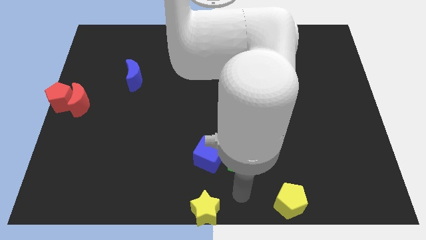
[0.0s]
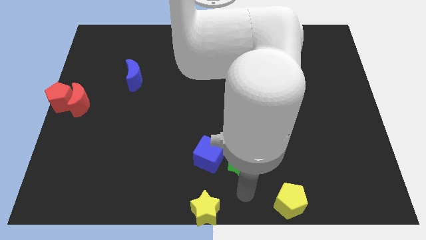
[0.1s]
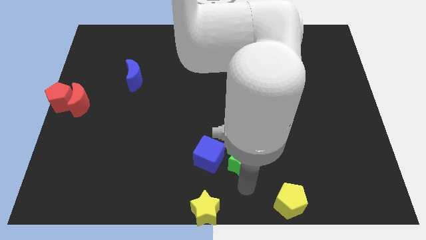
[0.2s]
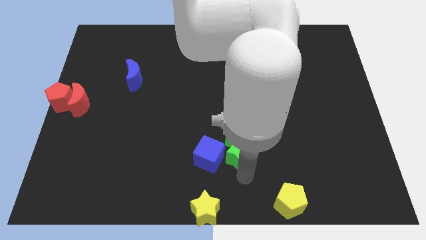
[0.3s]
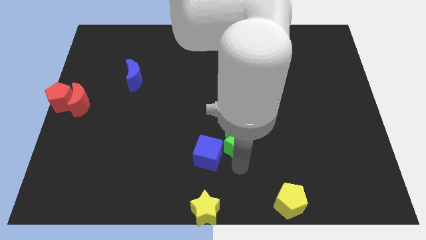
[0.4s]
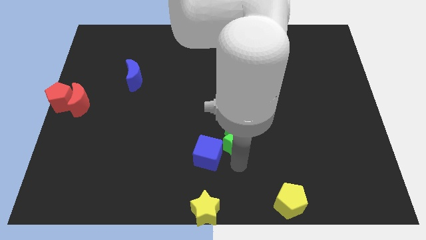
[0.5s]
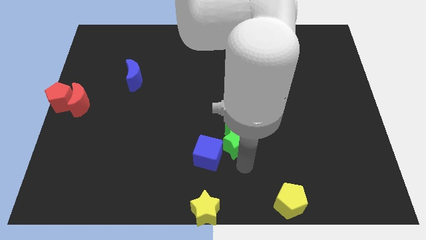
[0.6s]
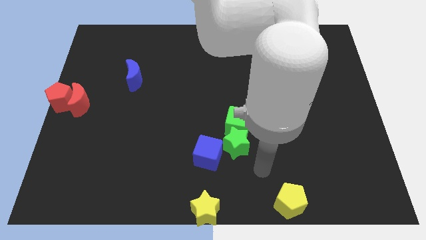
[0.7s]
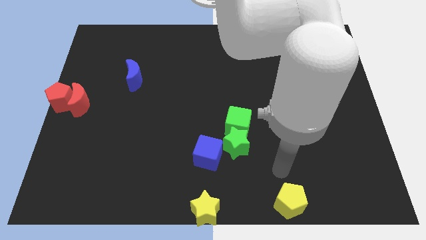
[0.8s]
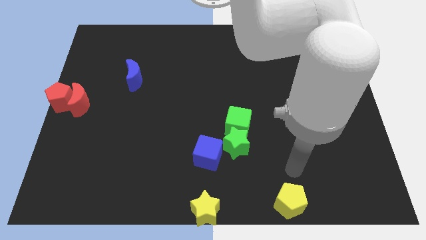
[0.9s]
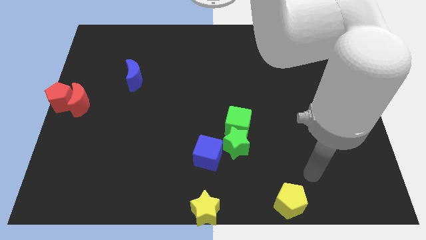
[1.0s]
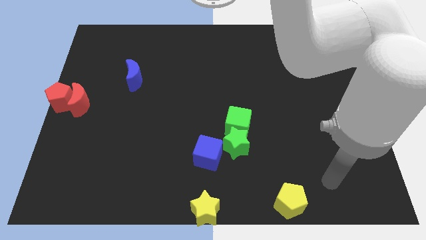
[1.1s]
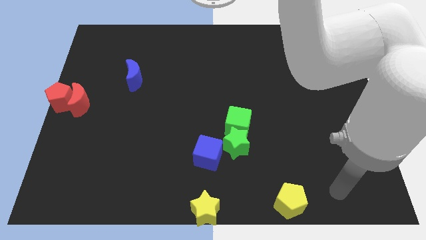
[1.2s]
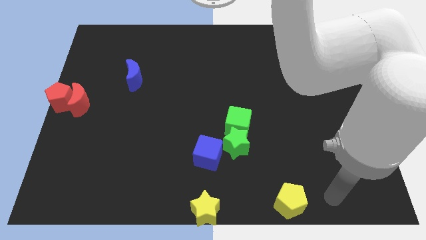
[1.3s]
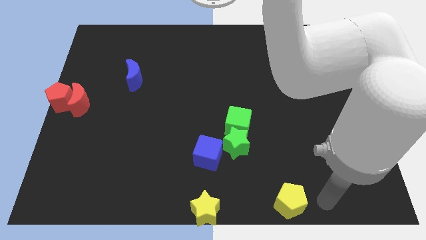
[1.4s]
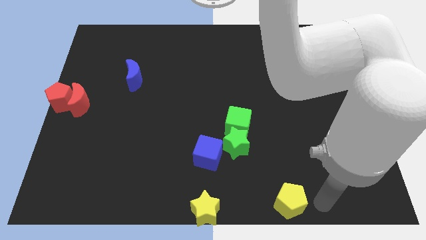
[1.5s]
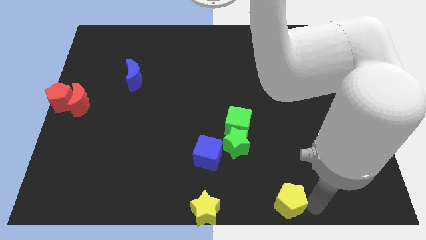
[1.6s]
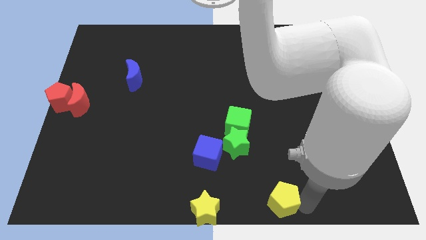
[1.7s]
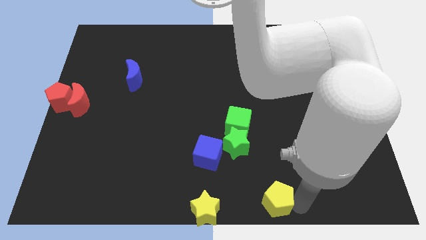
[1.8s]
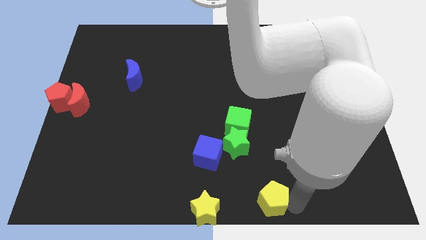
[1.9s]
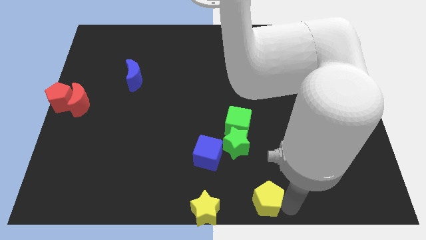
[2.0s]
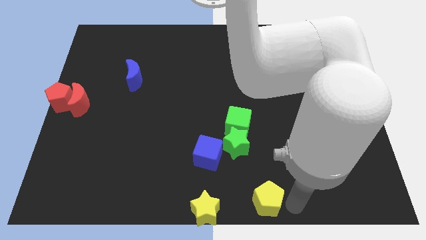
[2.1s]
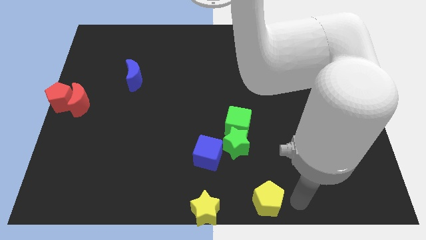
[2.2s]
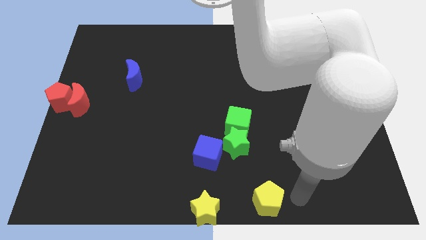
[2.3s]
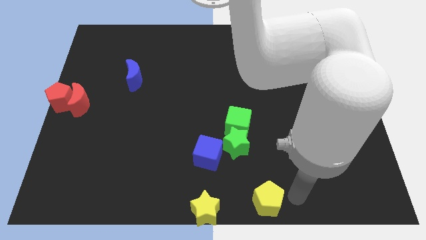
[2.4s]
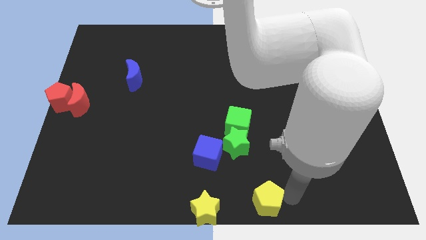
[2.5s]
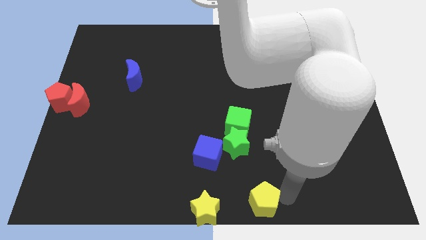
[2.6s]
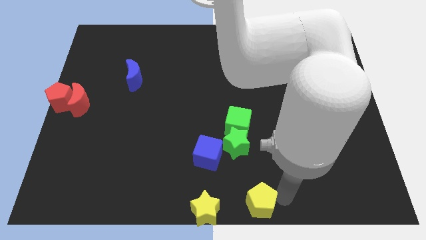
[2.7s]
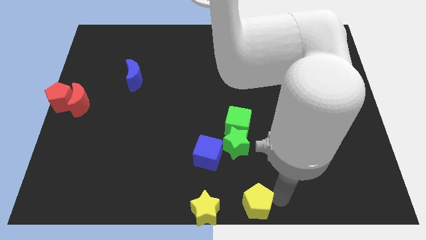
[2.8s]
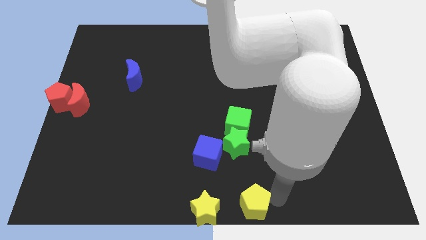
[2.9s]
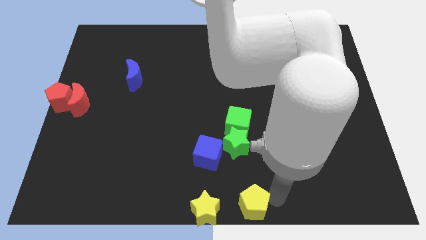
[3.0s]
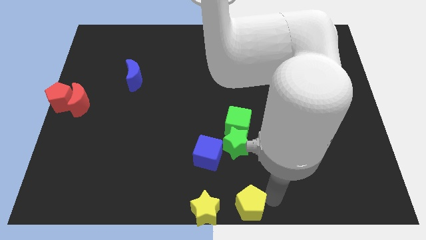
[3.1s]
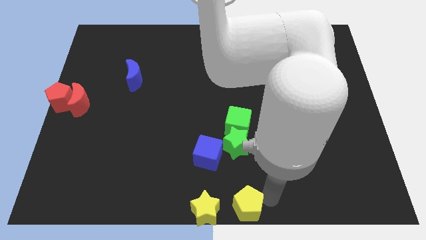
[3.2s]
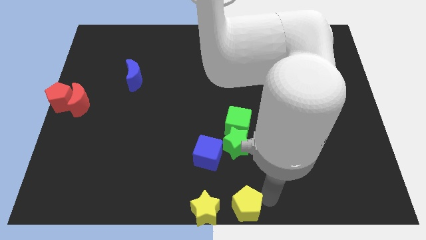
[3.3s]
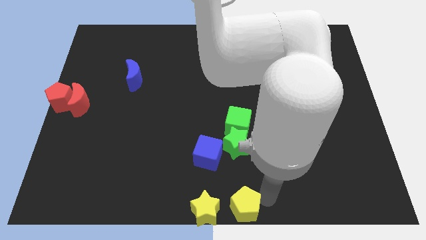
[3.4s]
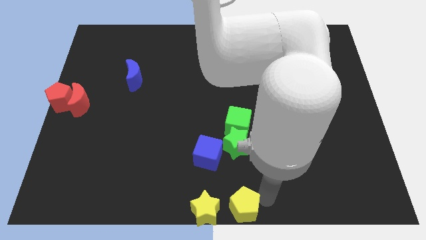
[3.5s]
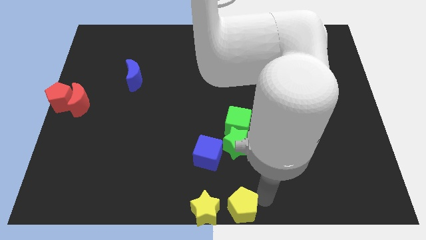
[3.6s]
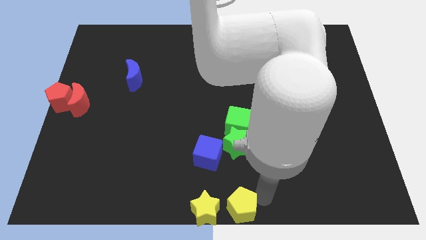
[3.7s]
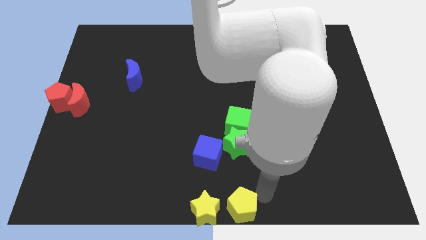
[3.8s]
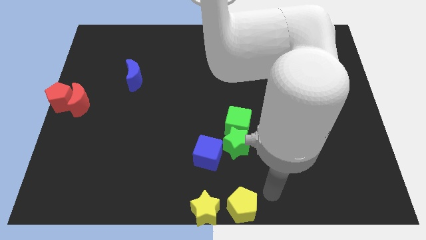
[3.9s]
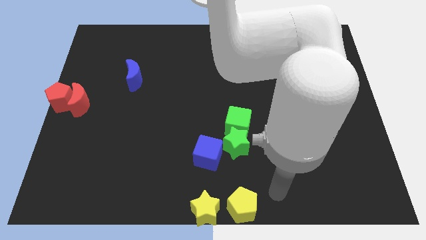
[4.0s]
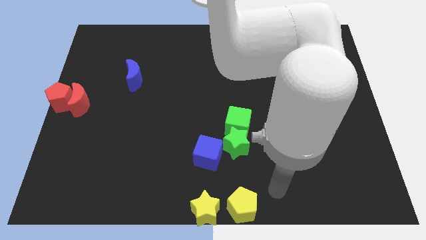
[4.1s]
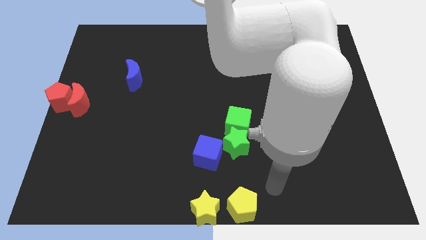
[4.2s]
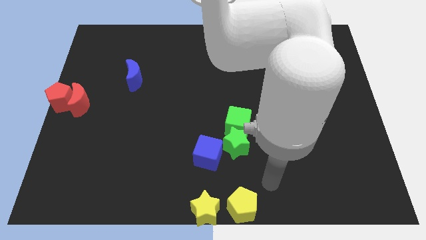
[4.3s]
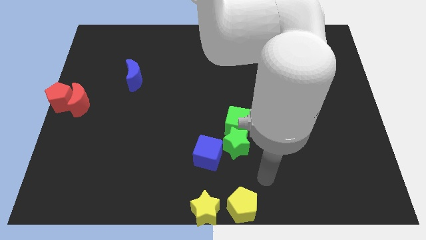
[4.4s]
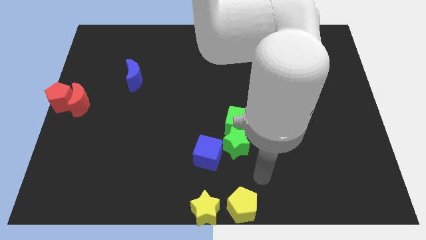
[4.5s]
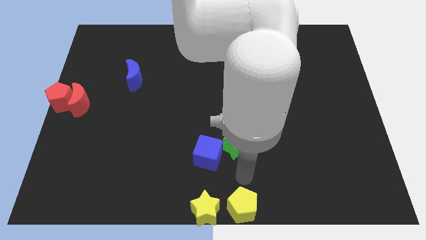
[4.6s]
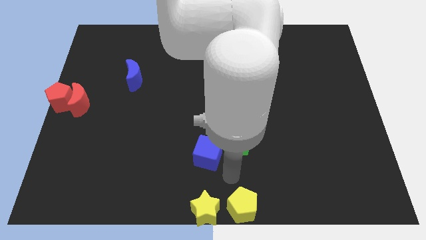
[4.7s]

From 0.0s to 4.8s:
push the yellow pentagon close to the right side of the yellow star

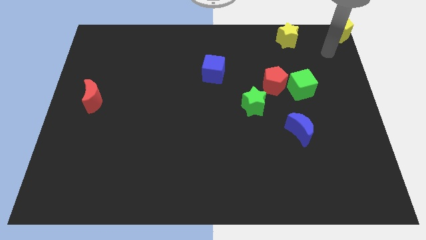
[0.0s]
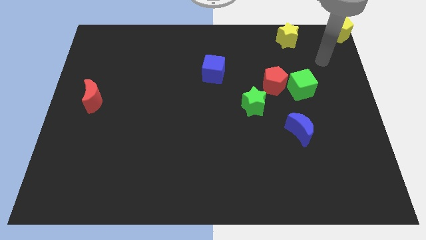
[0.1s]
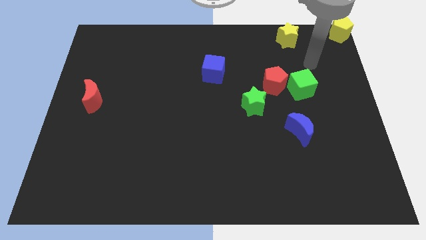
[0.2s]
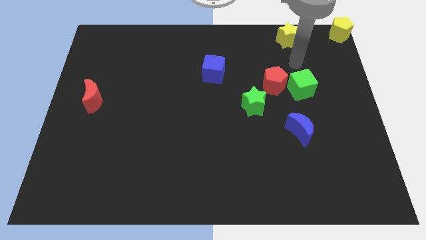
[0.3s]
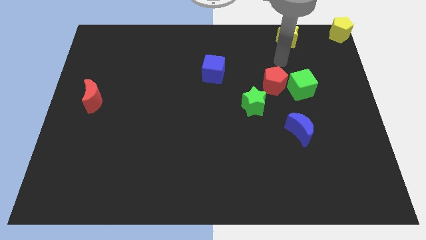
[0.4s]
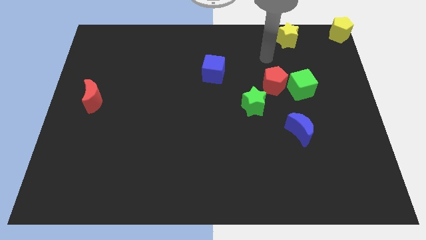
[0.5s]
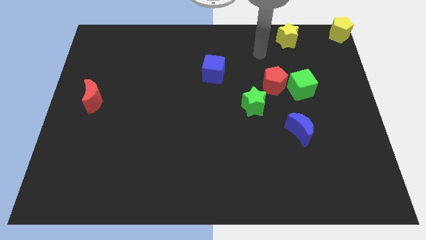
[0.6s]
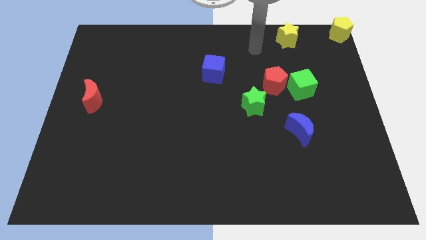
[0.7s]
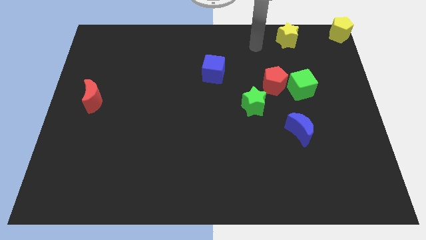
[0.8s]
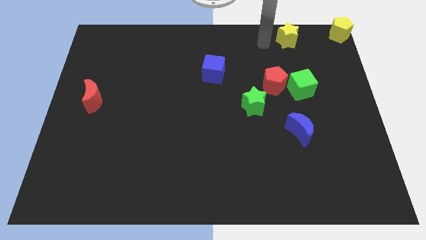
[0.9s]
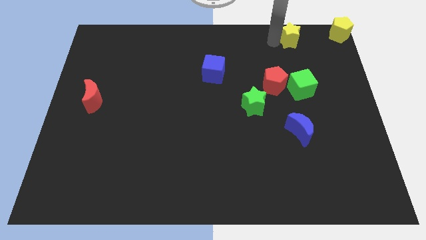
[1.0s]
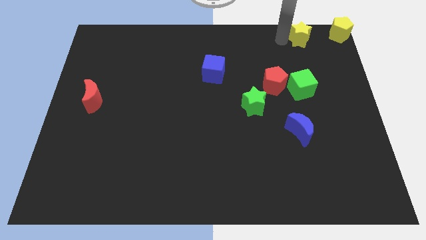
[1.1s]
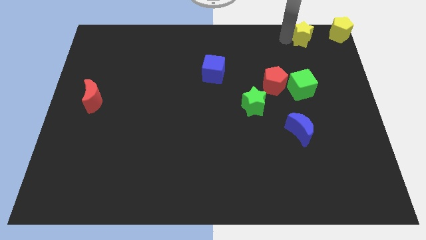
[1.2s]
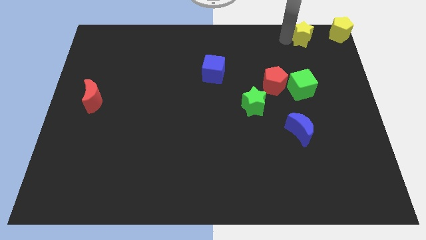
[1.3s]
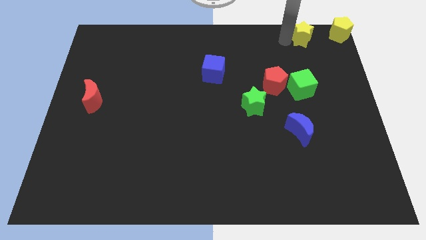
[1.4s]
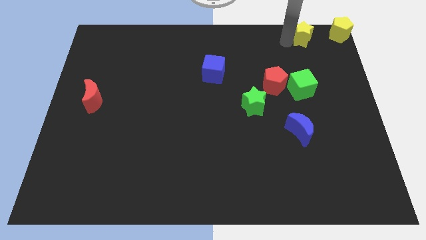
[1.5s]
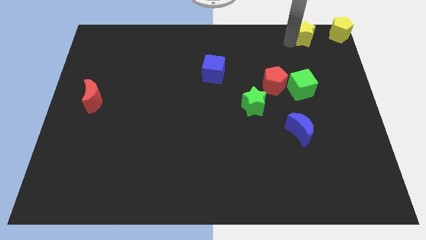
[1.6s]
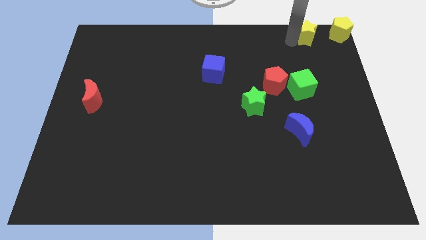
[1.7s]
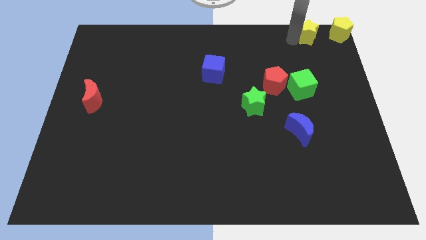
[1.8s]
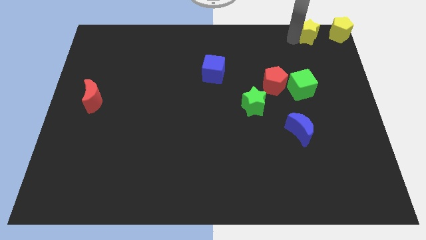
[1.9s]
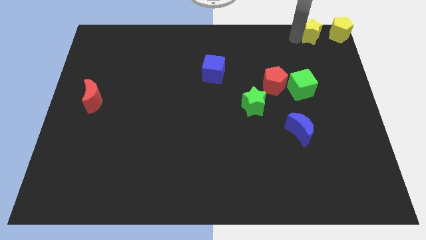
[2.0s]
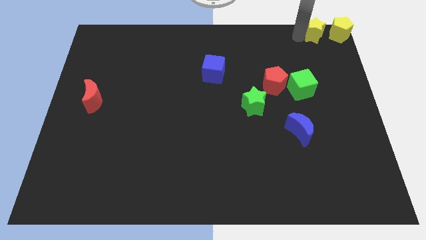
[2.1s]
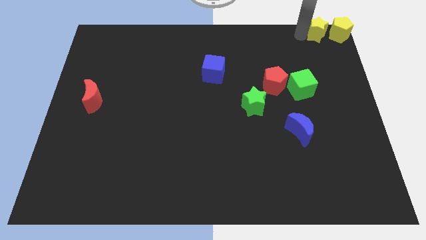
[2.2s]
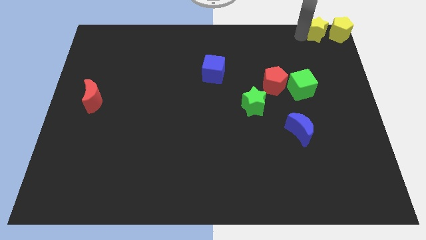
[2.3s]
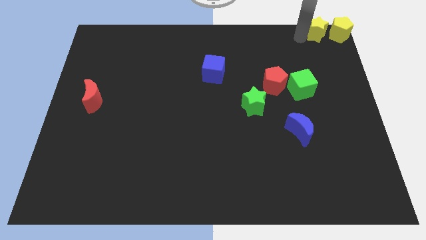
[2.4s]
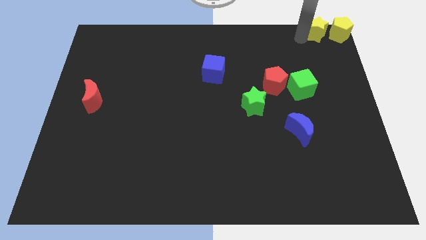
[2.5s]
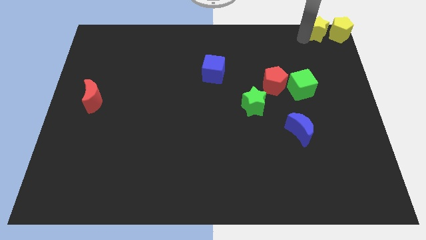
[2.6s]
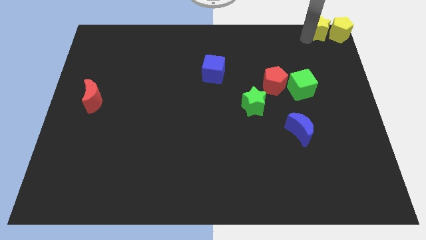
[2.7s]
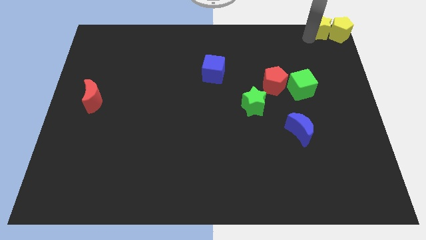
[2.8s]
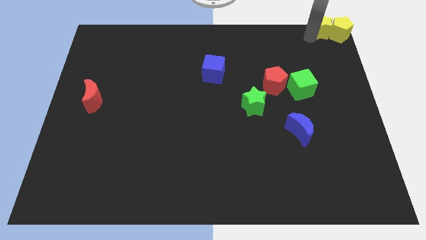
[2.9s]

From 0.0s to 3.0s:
push the yellow star to the left of yellow pentagon

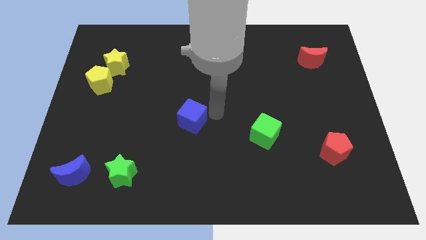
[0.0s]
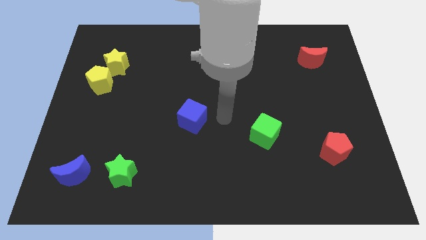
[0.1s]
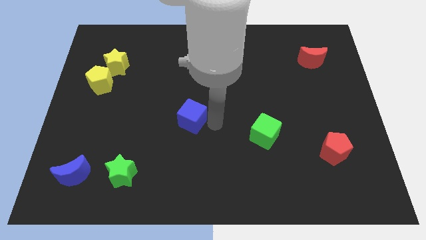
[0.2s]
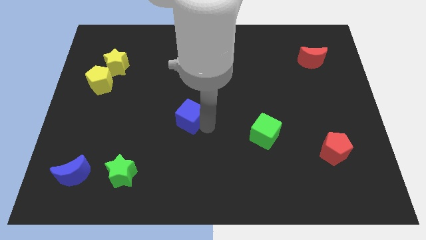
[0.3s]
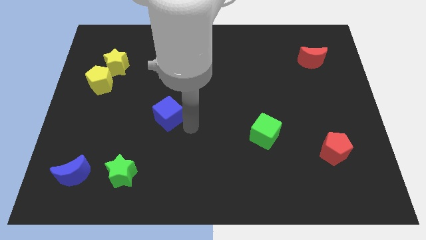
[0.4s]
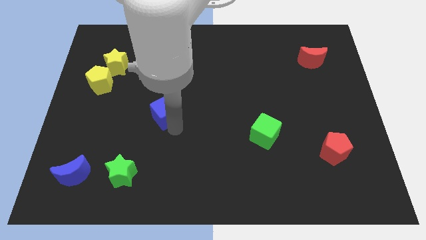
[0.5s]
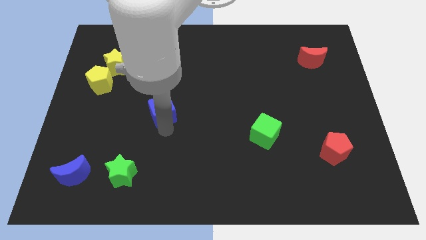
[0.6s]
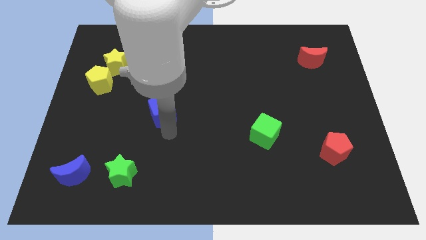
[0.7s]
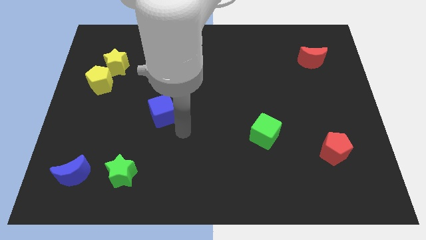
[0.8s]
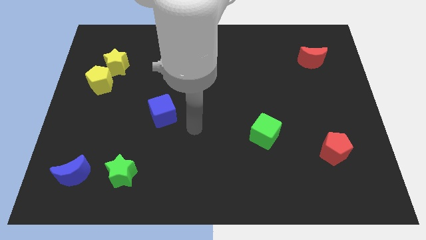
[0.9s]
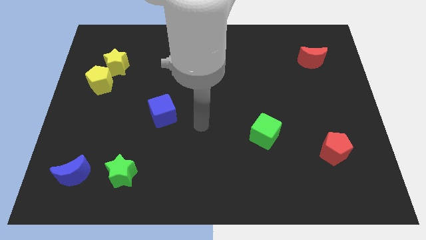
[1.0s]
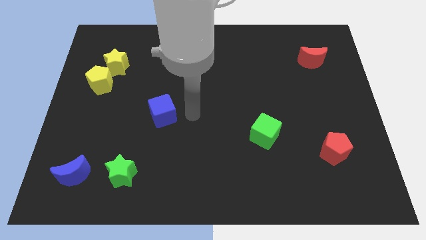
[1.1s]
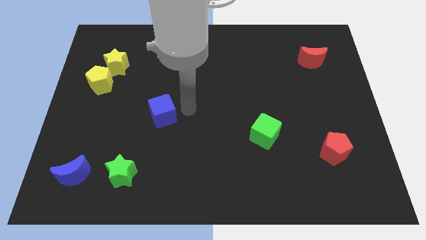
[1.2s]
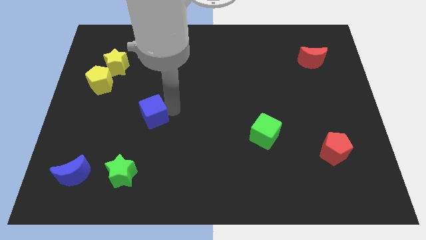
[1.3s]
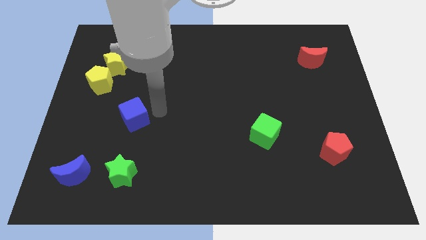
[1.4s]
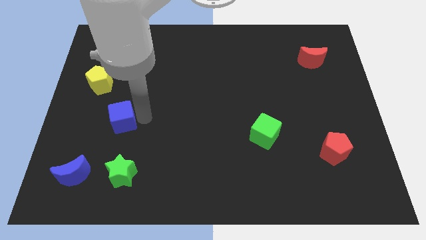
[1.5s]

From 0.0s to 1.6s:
move the blue cube above the green star
